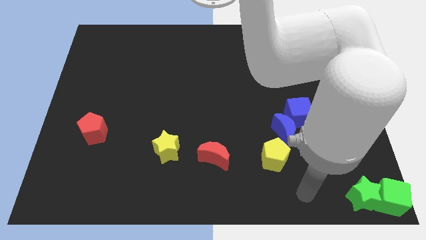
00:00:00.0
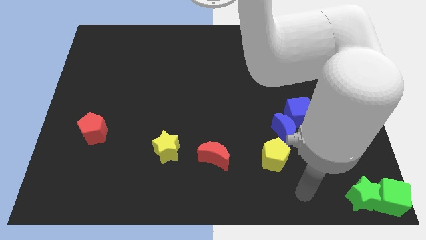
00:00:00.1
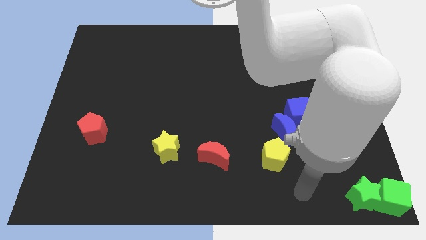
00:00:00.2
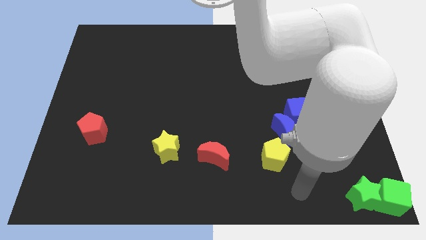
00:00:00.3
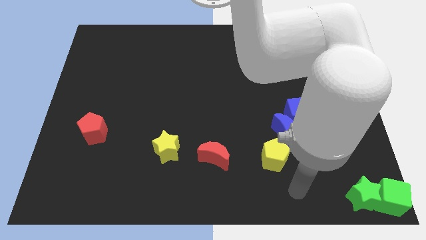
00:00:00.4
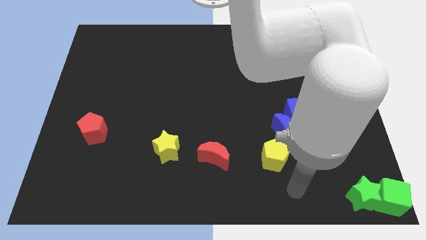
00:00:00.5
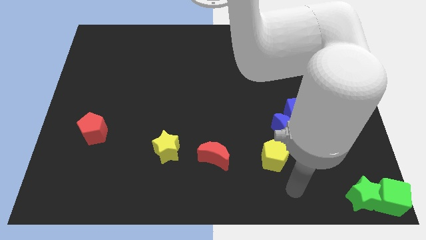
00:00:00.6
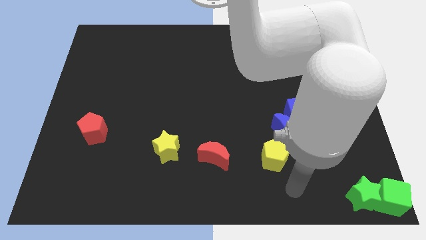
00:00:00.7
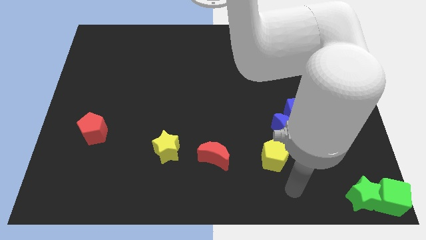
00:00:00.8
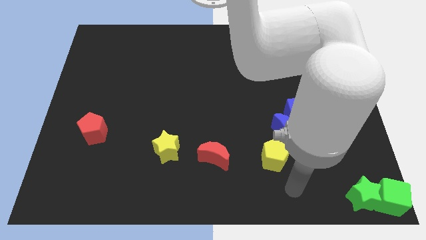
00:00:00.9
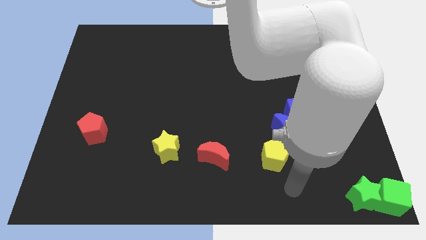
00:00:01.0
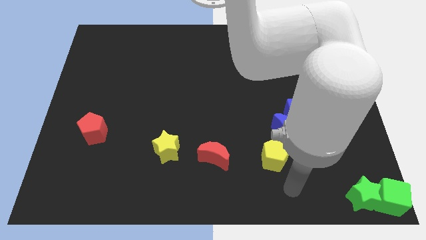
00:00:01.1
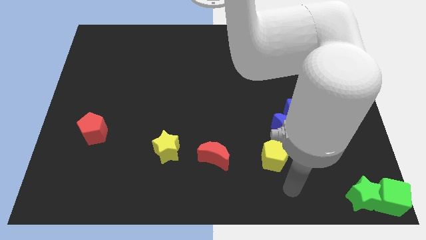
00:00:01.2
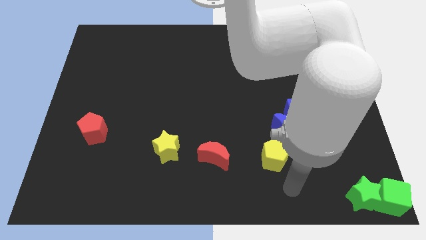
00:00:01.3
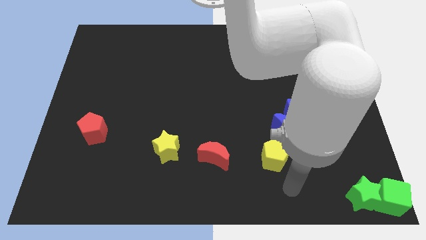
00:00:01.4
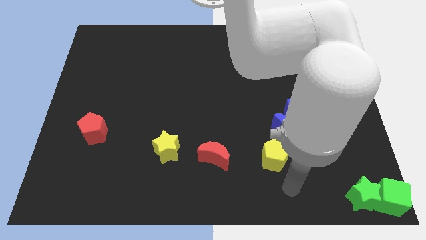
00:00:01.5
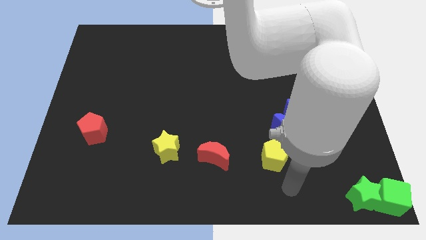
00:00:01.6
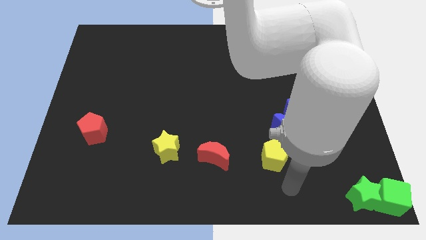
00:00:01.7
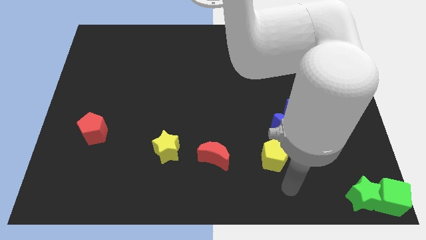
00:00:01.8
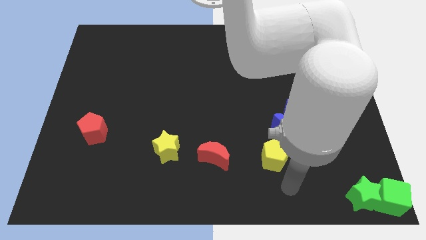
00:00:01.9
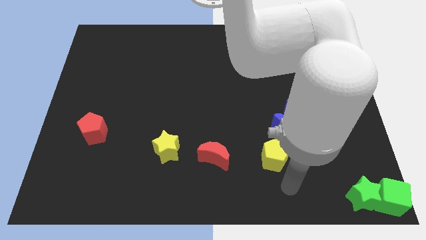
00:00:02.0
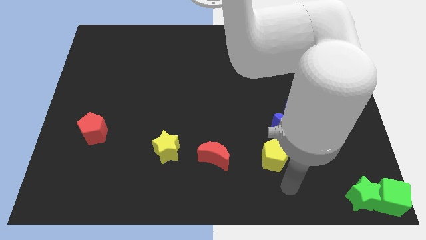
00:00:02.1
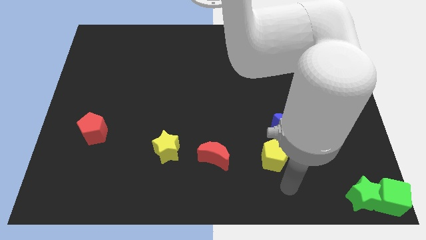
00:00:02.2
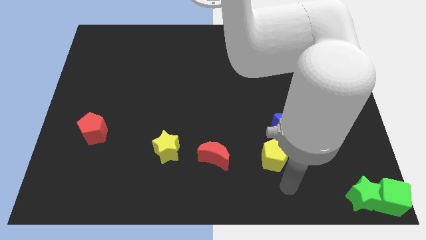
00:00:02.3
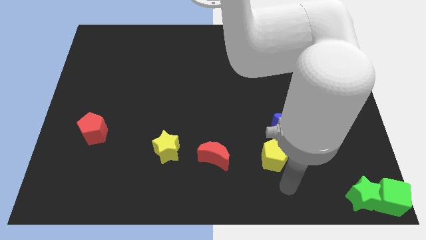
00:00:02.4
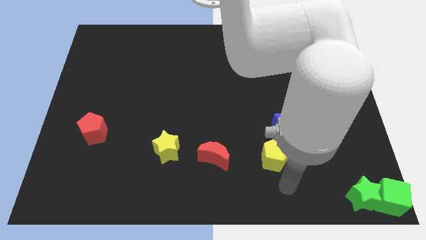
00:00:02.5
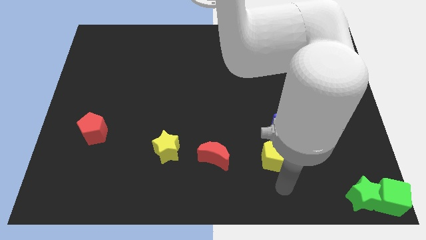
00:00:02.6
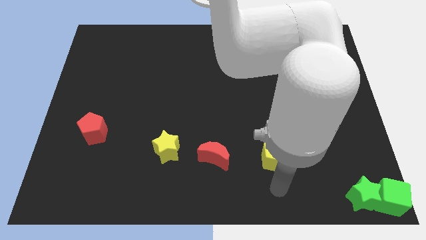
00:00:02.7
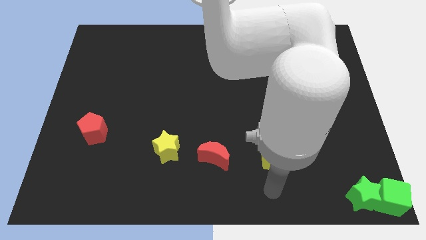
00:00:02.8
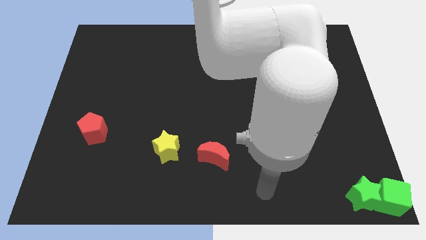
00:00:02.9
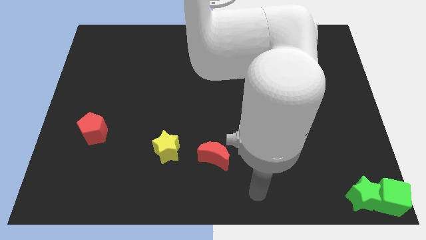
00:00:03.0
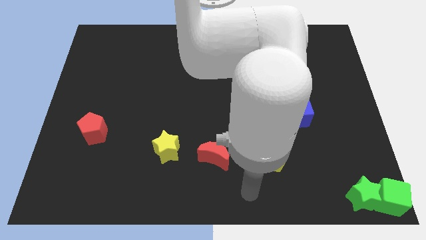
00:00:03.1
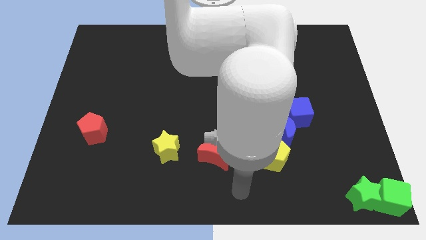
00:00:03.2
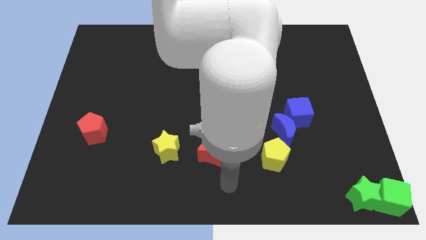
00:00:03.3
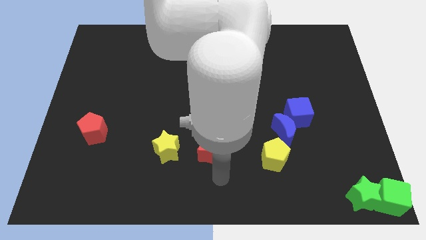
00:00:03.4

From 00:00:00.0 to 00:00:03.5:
move the arm towards the red crescent

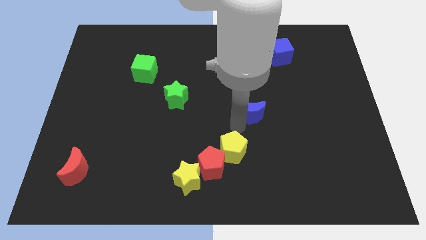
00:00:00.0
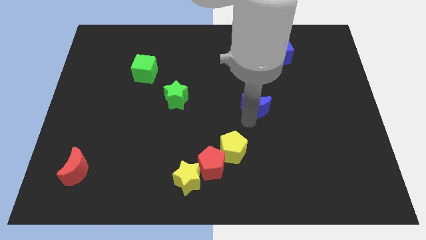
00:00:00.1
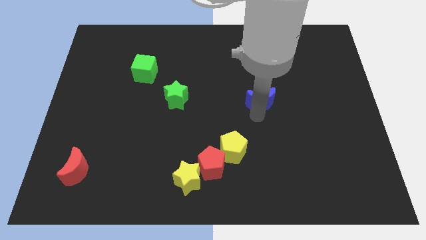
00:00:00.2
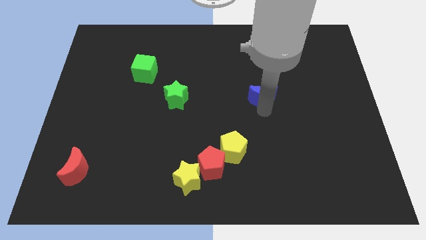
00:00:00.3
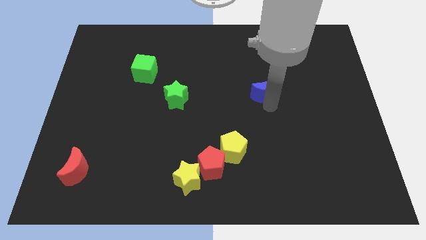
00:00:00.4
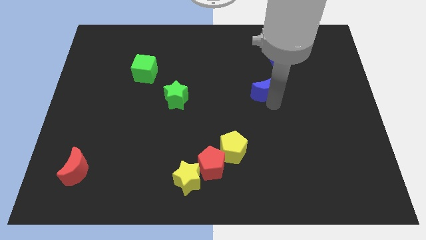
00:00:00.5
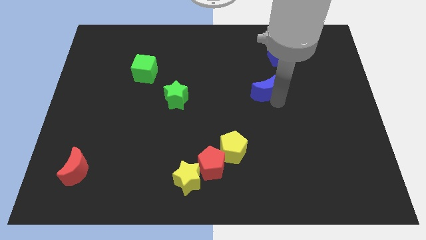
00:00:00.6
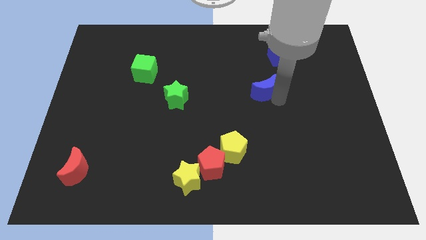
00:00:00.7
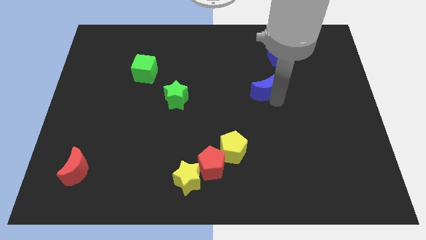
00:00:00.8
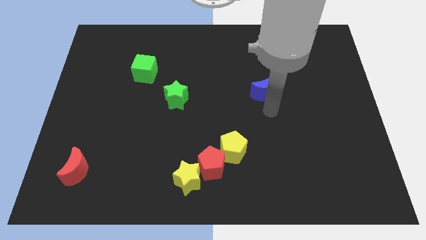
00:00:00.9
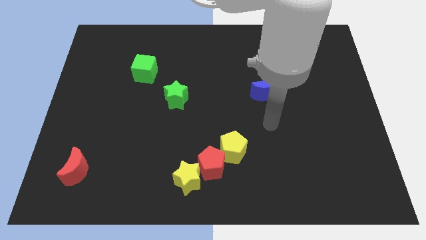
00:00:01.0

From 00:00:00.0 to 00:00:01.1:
push the blue moon towards the bottom of the blue cube

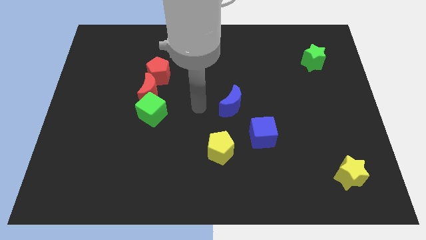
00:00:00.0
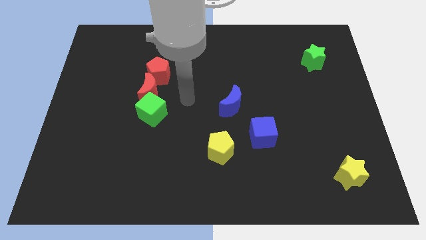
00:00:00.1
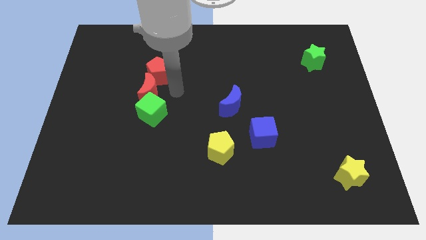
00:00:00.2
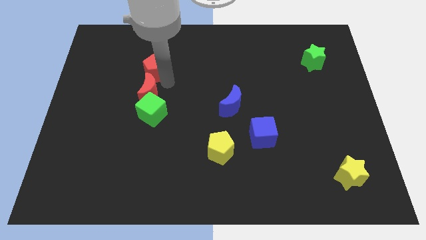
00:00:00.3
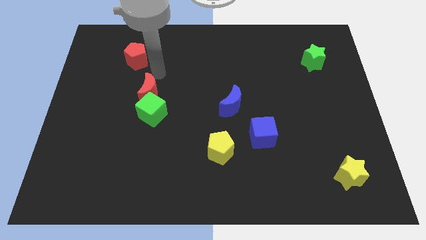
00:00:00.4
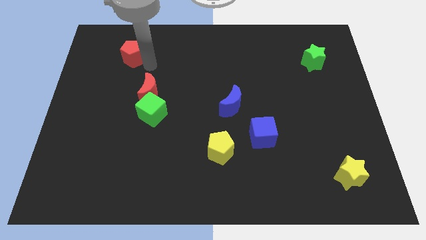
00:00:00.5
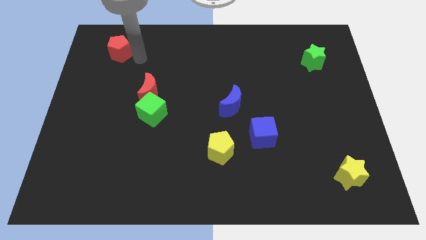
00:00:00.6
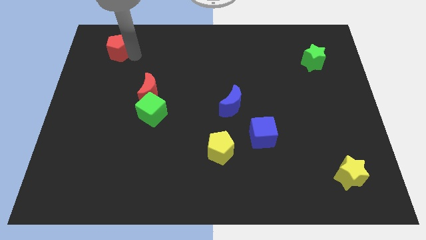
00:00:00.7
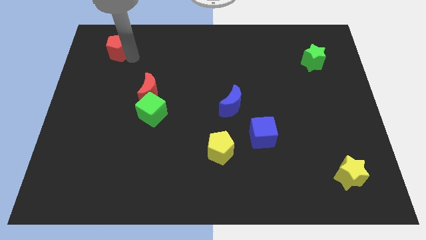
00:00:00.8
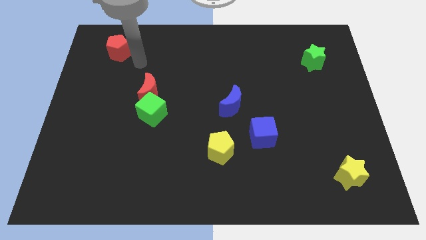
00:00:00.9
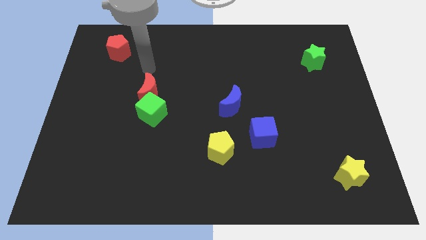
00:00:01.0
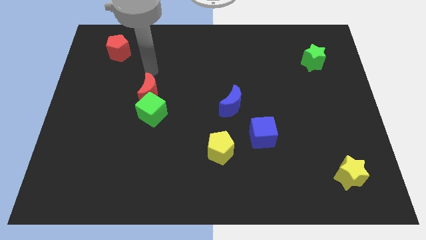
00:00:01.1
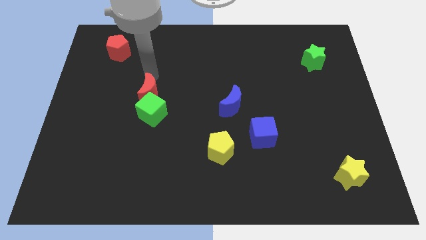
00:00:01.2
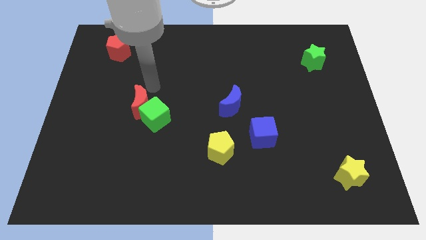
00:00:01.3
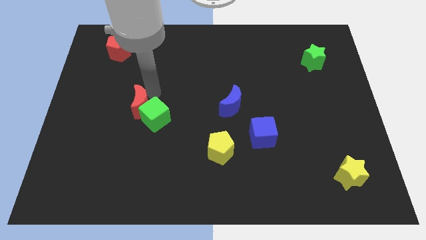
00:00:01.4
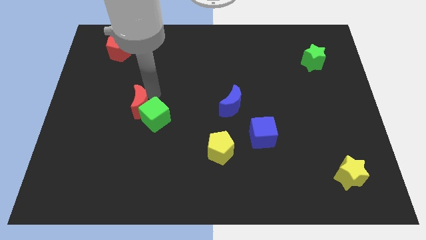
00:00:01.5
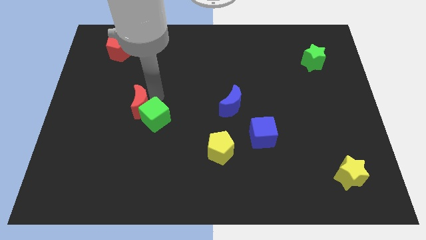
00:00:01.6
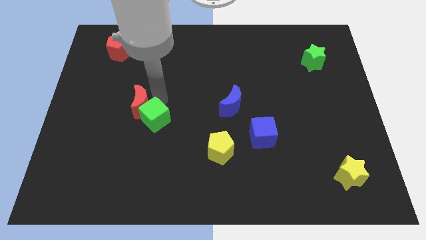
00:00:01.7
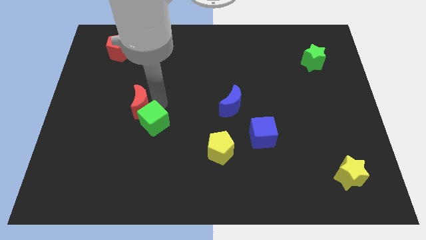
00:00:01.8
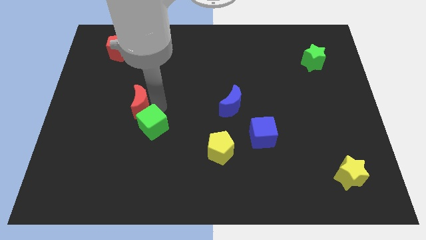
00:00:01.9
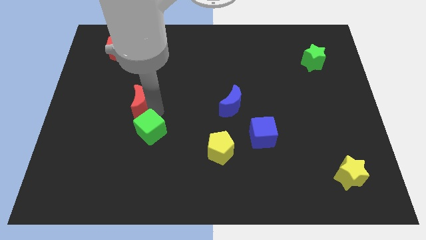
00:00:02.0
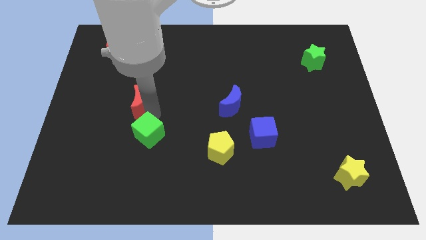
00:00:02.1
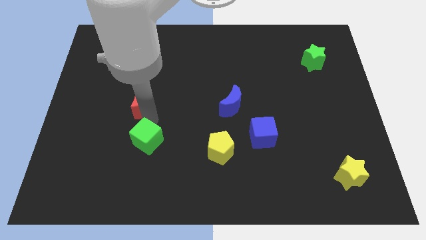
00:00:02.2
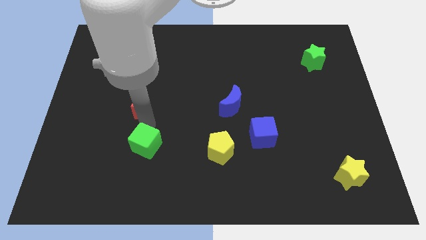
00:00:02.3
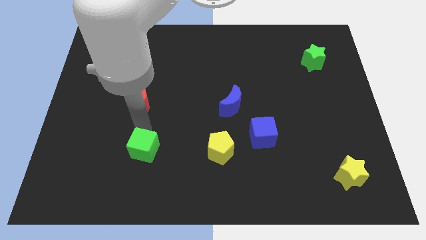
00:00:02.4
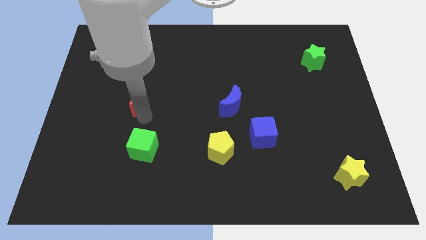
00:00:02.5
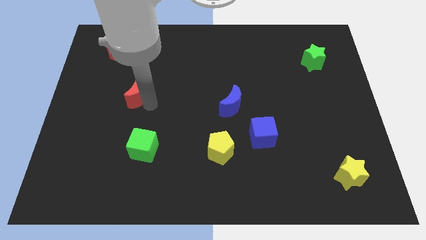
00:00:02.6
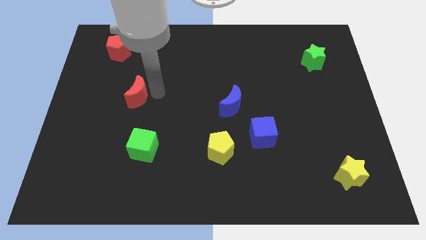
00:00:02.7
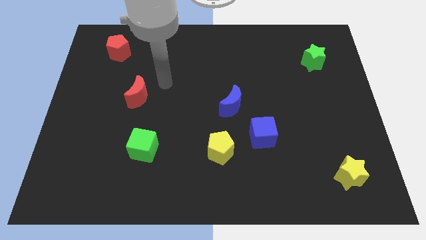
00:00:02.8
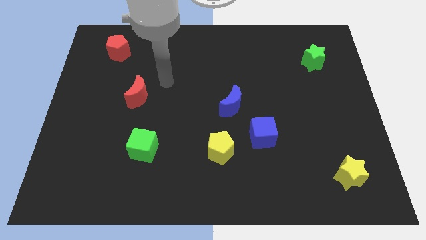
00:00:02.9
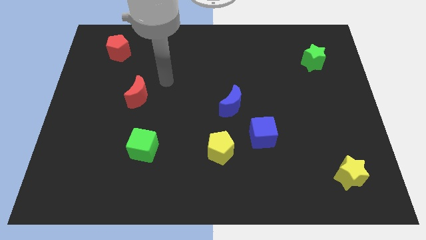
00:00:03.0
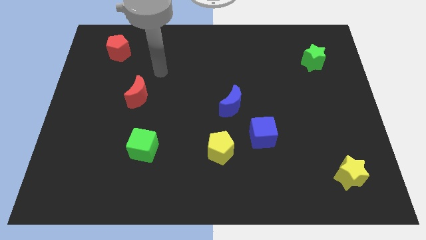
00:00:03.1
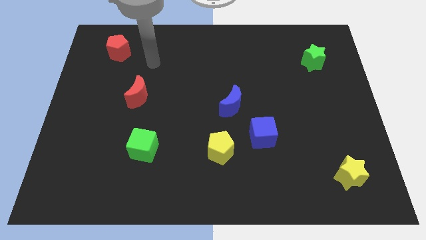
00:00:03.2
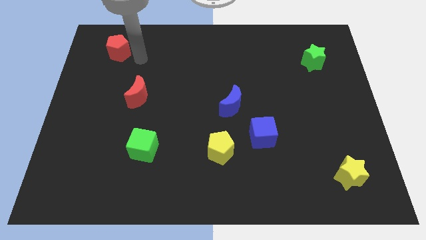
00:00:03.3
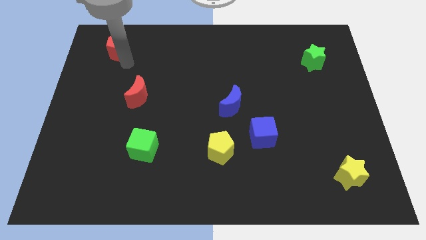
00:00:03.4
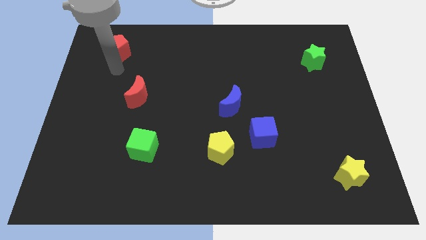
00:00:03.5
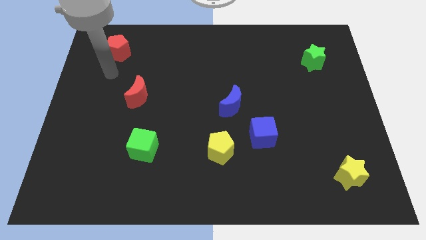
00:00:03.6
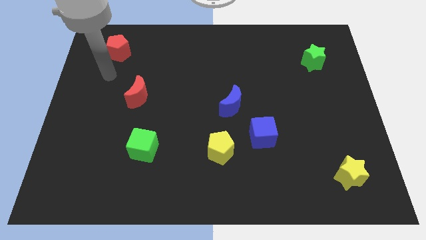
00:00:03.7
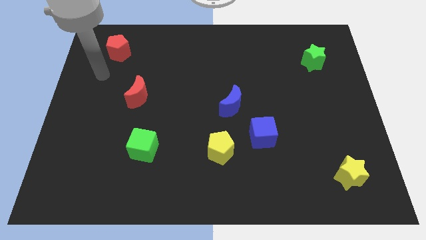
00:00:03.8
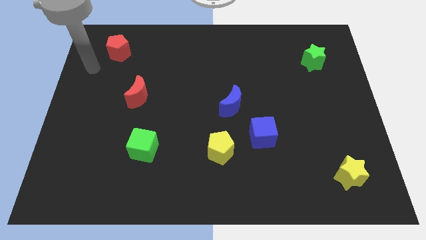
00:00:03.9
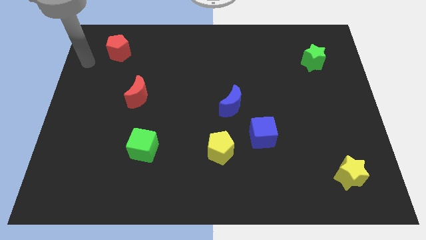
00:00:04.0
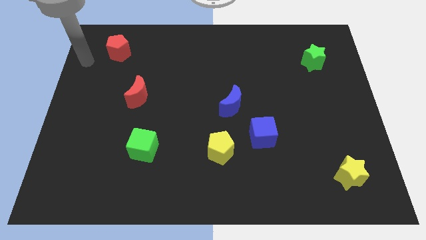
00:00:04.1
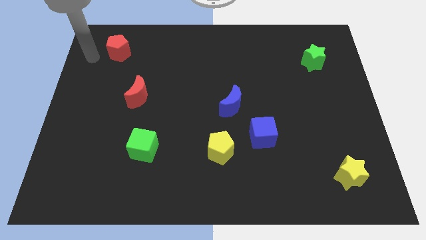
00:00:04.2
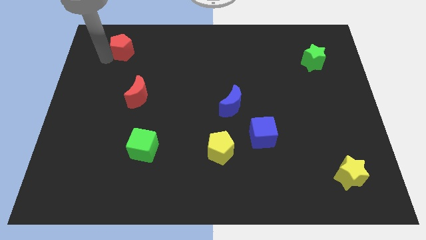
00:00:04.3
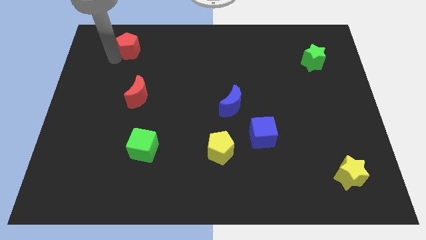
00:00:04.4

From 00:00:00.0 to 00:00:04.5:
place the red blocks and the green cube in a vertical line
